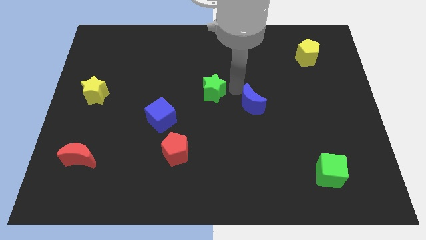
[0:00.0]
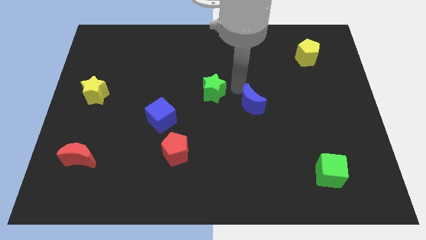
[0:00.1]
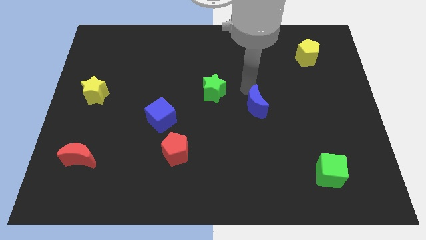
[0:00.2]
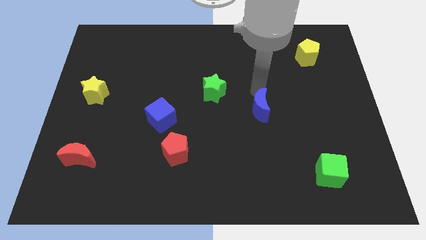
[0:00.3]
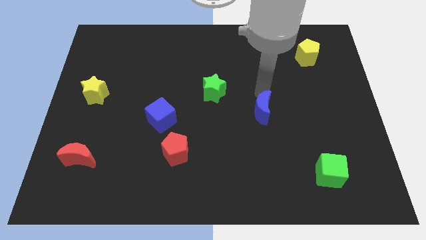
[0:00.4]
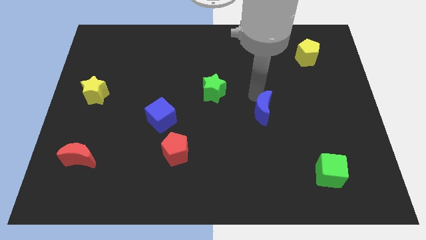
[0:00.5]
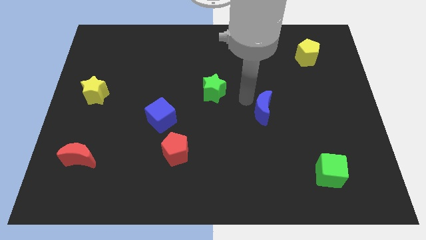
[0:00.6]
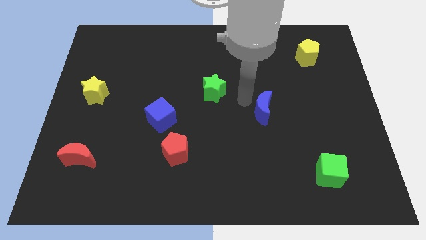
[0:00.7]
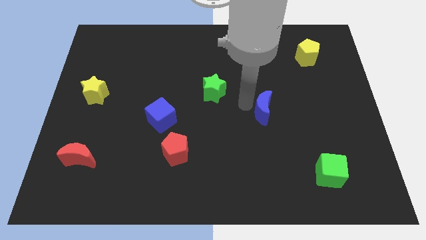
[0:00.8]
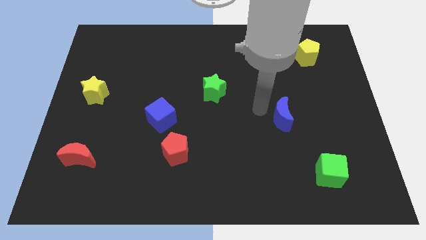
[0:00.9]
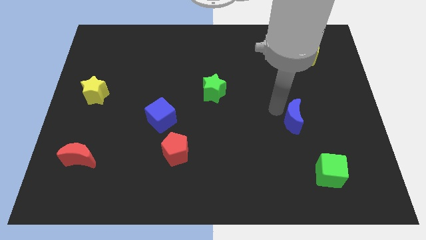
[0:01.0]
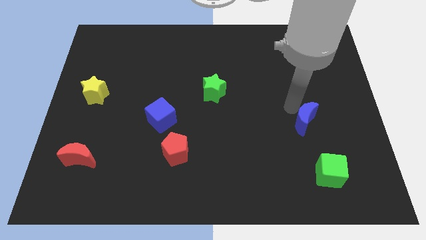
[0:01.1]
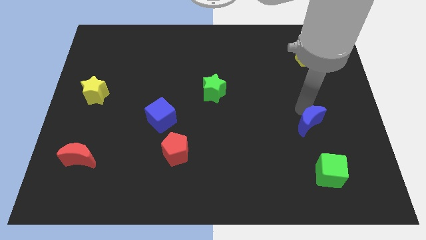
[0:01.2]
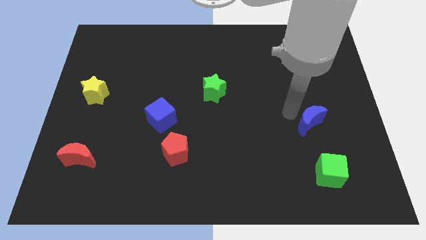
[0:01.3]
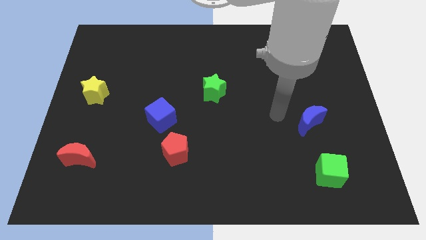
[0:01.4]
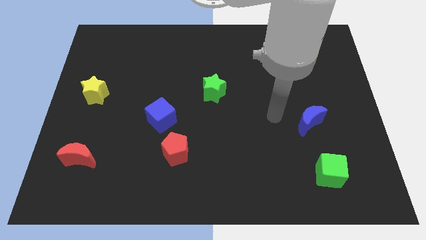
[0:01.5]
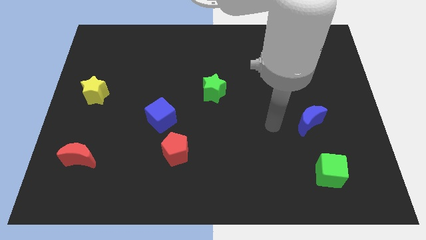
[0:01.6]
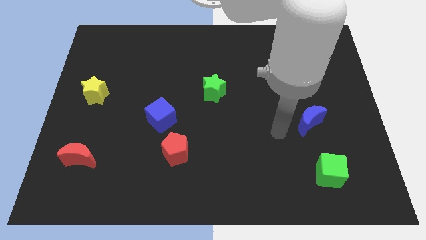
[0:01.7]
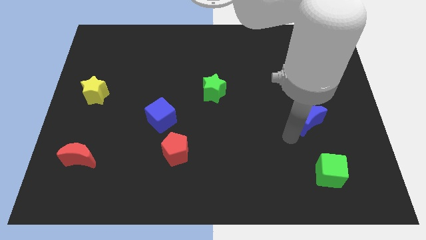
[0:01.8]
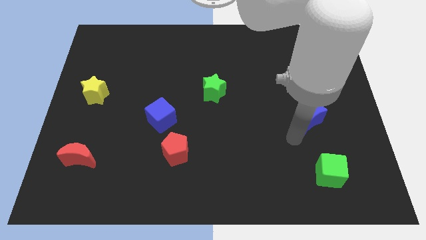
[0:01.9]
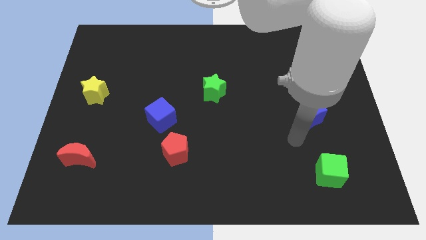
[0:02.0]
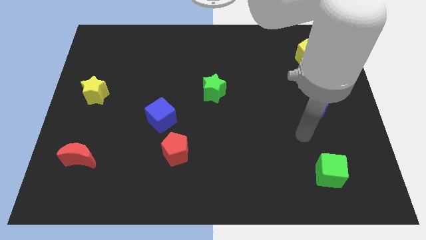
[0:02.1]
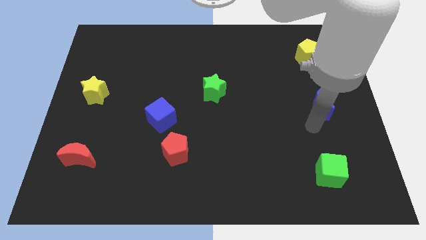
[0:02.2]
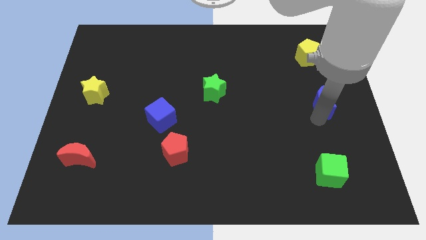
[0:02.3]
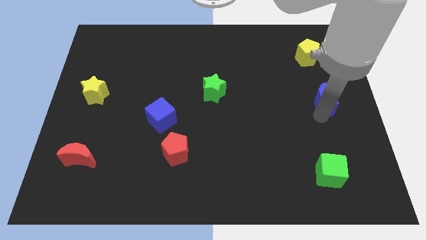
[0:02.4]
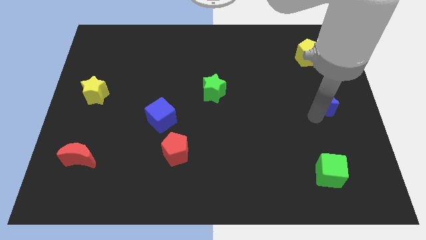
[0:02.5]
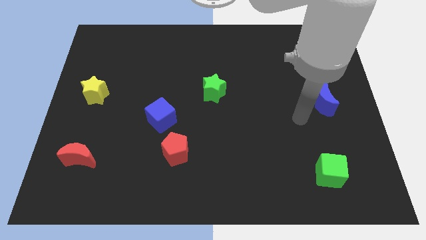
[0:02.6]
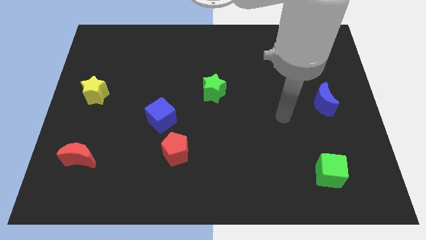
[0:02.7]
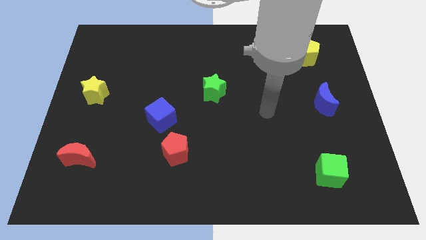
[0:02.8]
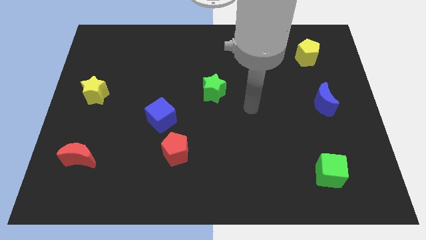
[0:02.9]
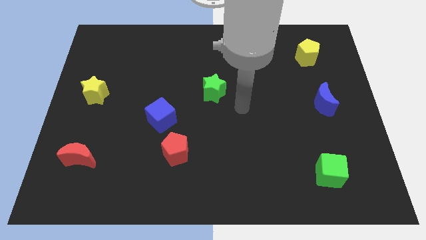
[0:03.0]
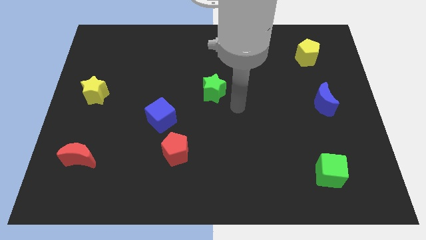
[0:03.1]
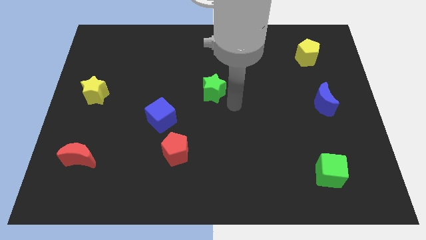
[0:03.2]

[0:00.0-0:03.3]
put the blue moon vertically below the yellow pentagon

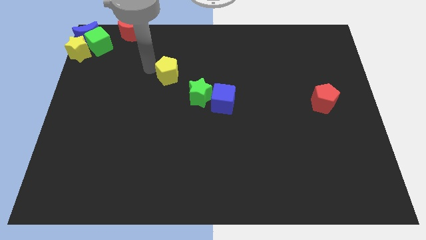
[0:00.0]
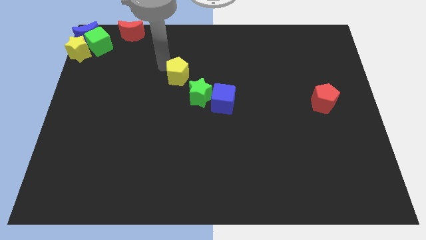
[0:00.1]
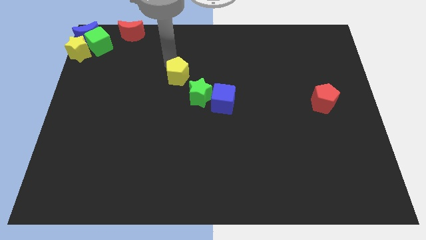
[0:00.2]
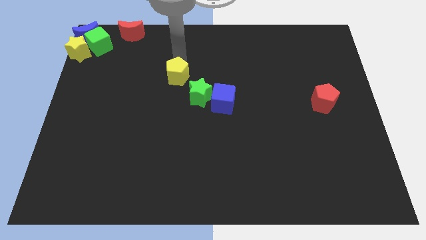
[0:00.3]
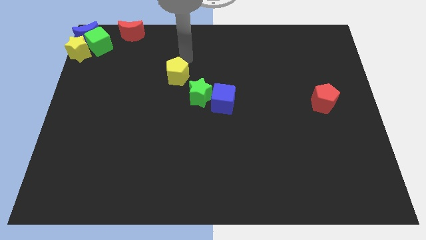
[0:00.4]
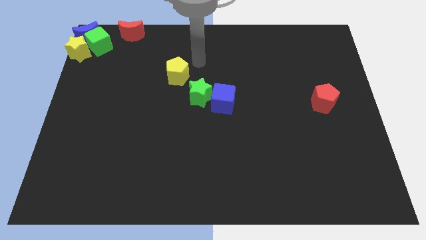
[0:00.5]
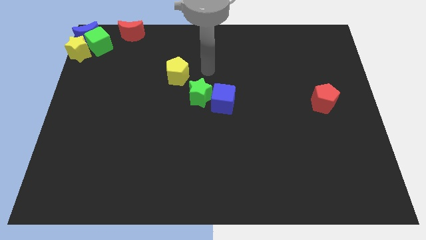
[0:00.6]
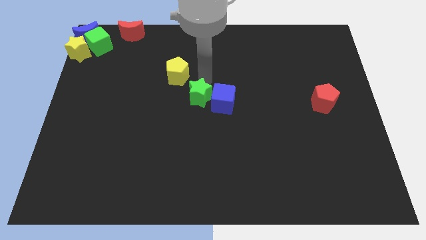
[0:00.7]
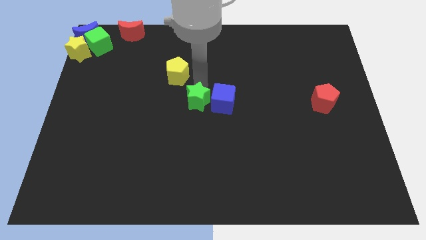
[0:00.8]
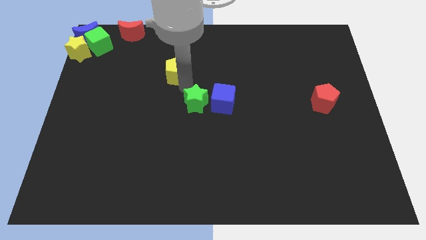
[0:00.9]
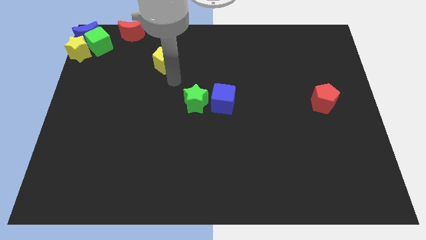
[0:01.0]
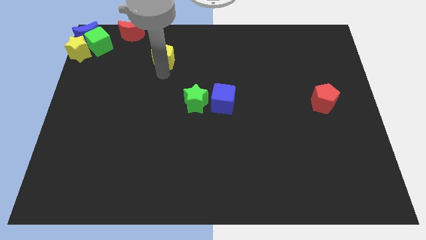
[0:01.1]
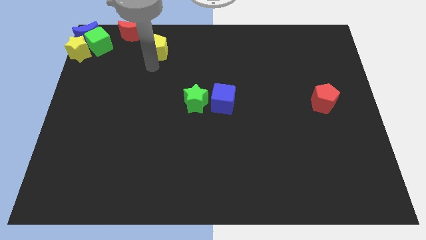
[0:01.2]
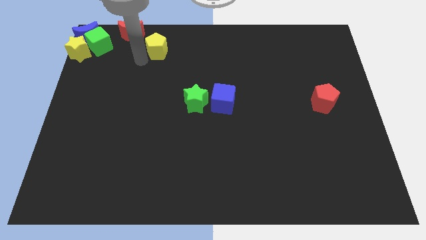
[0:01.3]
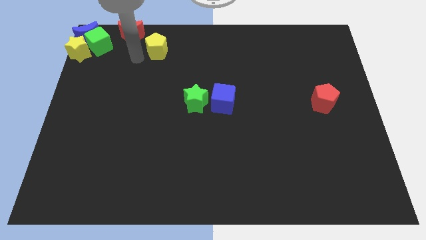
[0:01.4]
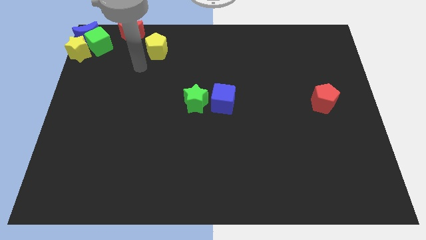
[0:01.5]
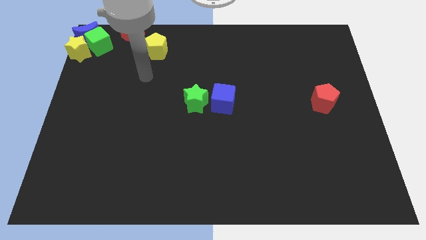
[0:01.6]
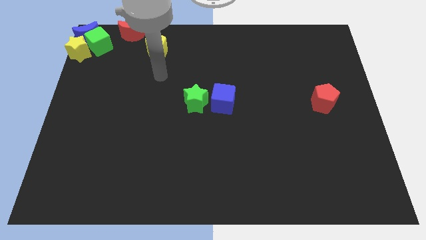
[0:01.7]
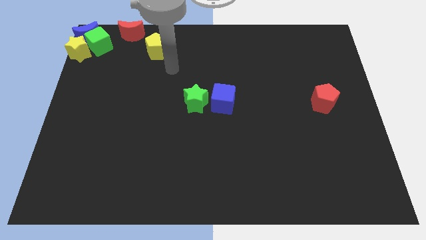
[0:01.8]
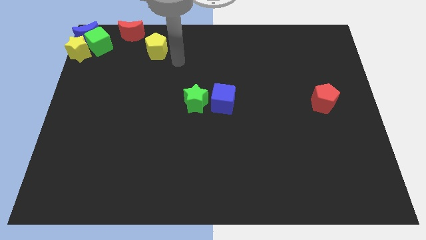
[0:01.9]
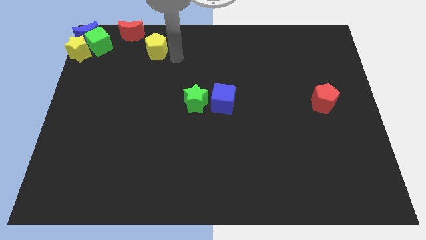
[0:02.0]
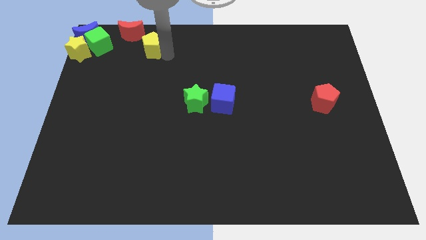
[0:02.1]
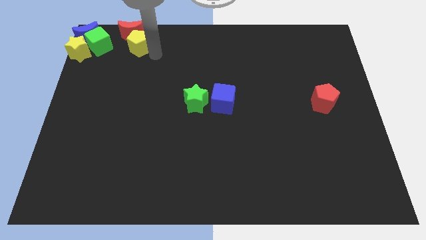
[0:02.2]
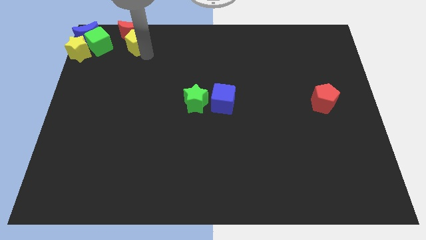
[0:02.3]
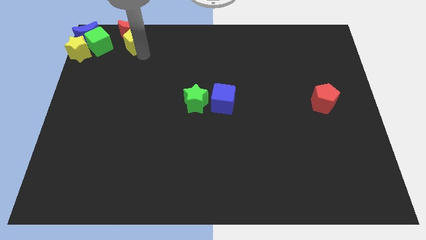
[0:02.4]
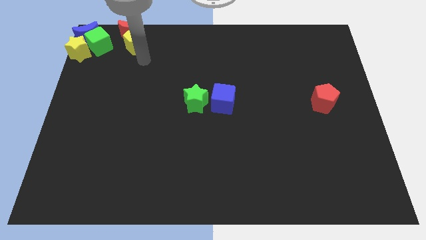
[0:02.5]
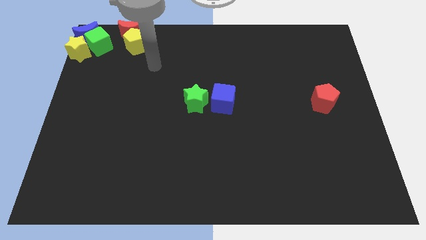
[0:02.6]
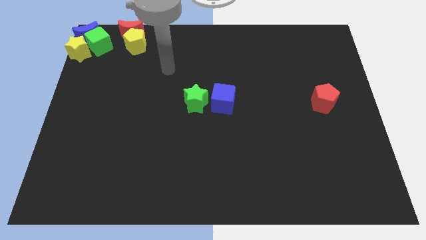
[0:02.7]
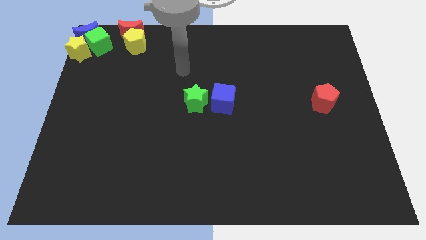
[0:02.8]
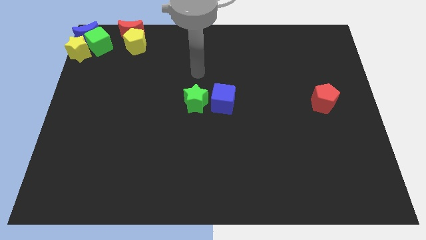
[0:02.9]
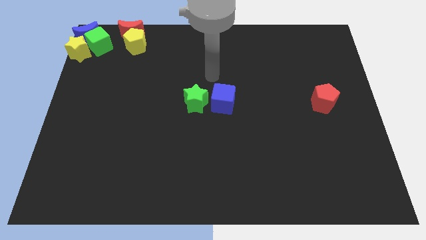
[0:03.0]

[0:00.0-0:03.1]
push the yellow pentagon to the bottom of the red crescent

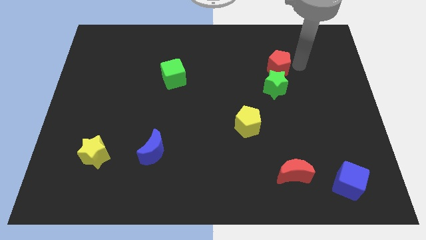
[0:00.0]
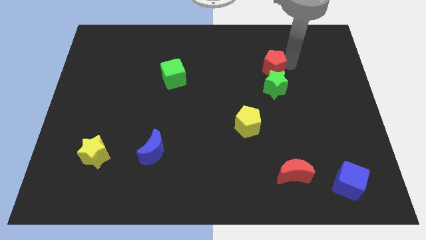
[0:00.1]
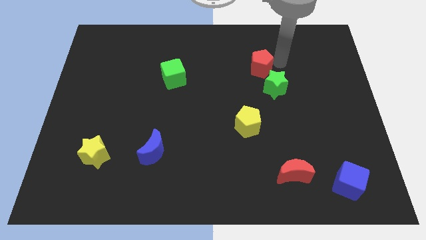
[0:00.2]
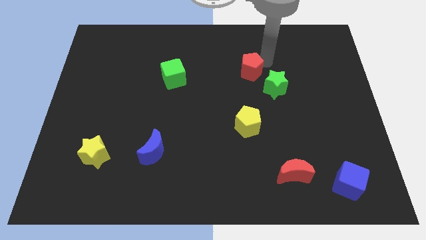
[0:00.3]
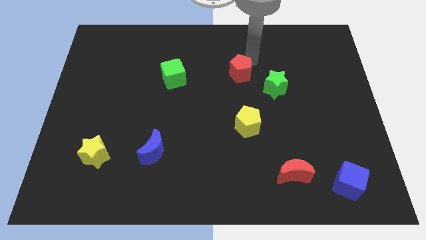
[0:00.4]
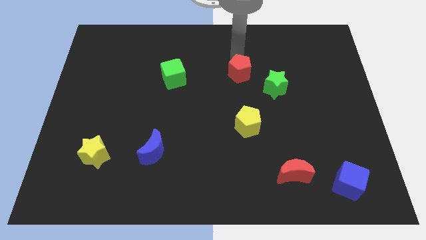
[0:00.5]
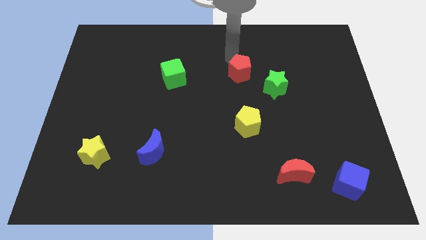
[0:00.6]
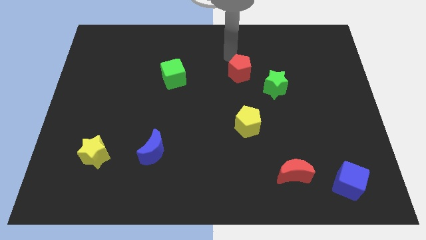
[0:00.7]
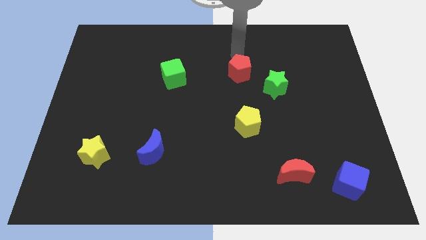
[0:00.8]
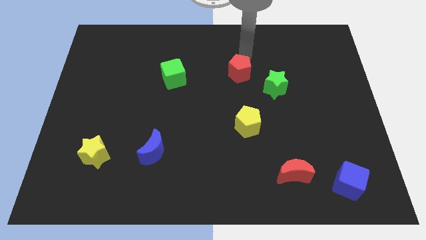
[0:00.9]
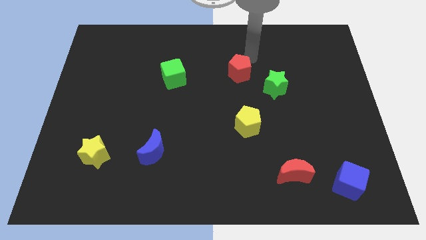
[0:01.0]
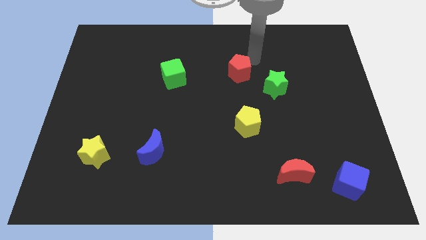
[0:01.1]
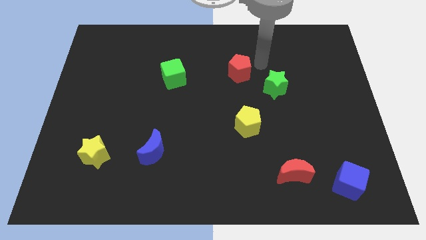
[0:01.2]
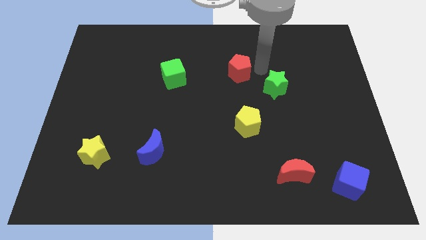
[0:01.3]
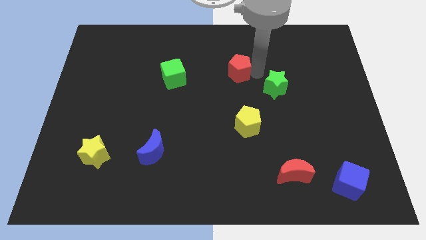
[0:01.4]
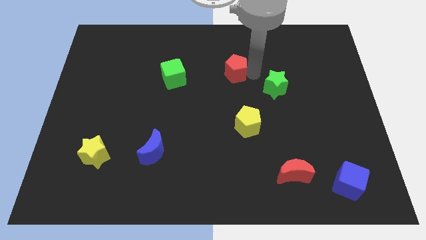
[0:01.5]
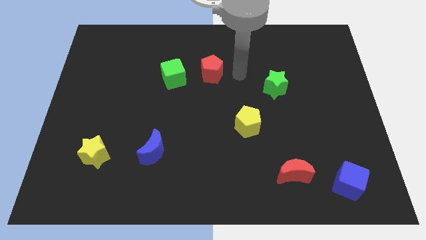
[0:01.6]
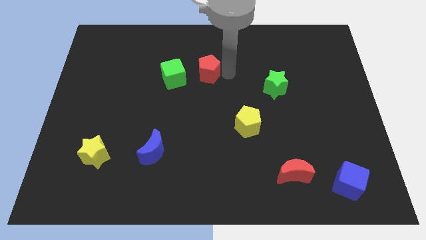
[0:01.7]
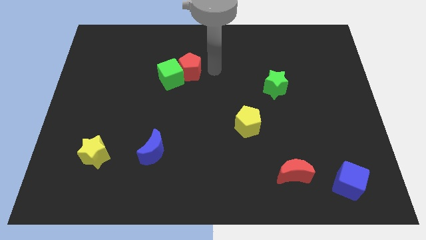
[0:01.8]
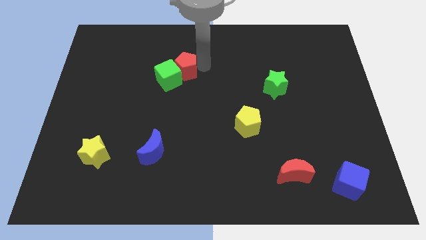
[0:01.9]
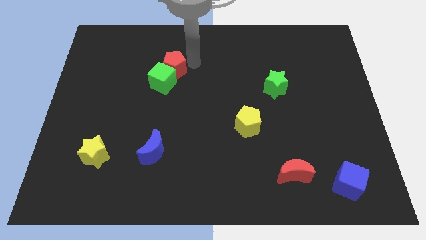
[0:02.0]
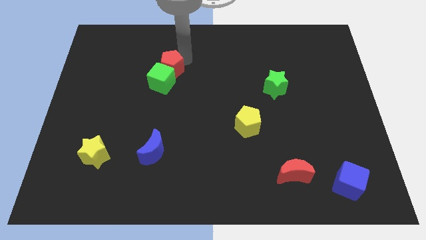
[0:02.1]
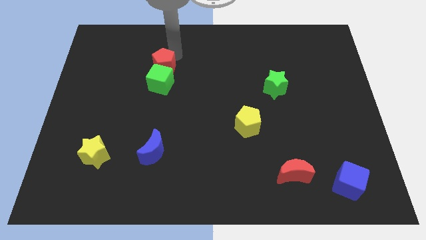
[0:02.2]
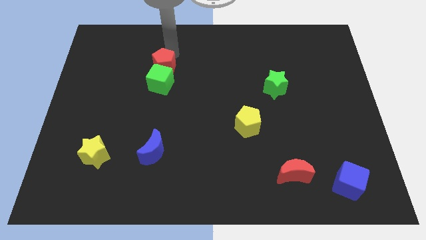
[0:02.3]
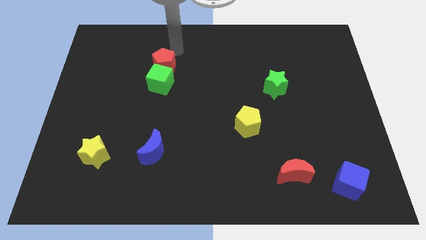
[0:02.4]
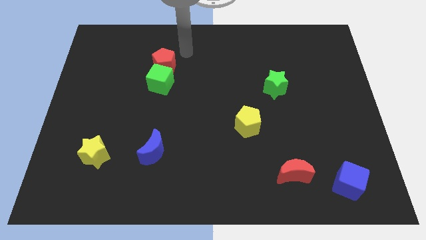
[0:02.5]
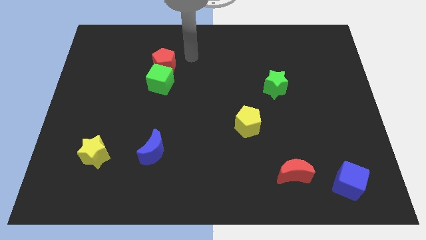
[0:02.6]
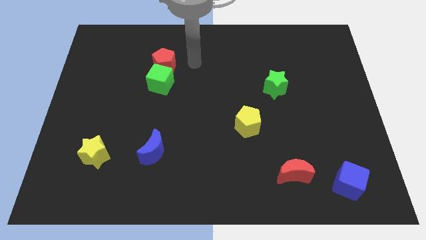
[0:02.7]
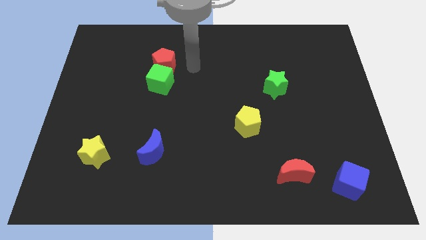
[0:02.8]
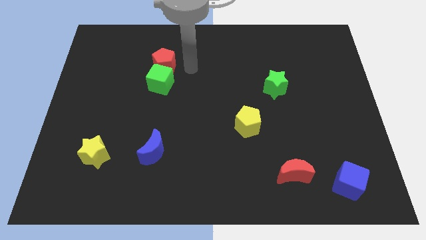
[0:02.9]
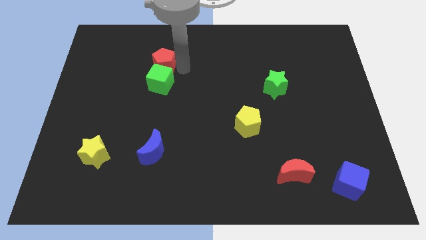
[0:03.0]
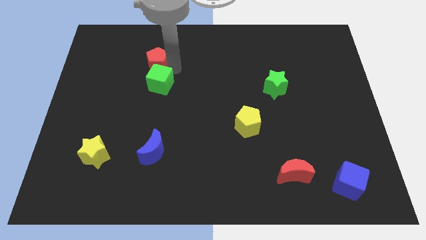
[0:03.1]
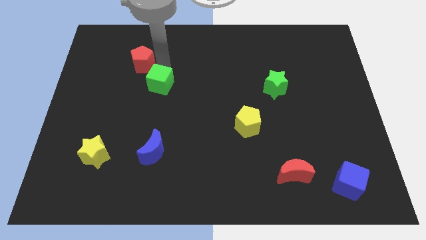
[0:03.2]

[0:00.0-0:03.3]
place red pentagon beside green cube
